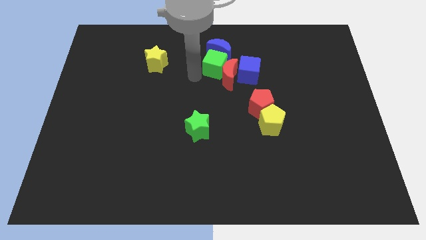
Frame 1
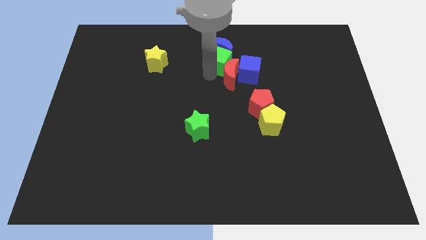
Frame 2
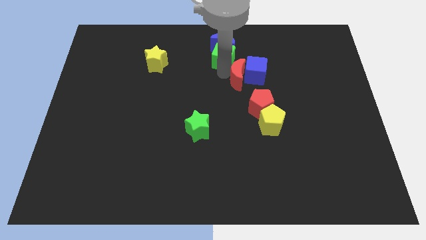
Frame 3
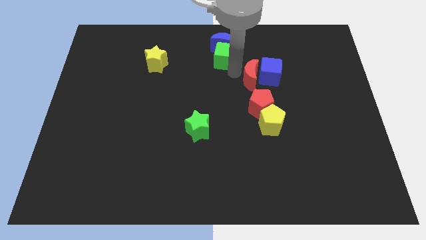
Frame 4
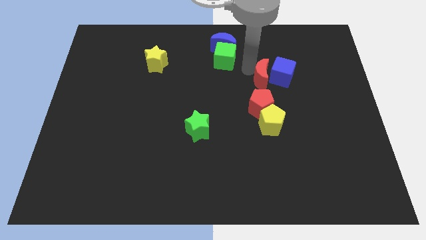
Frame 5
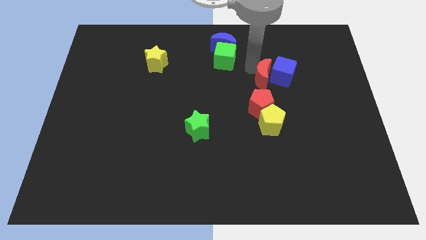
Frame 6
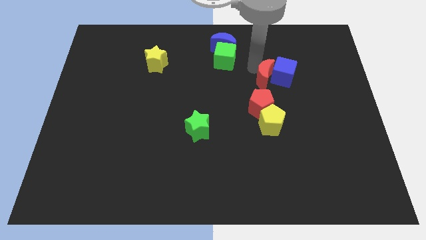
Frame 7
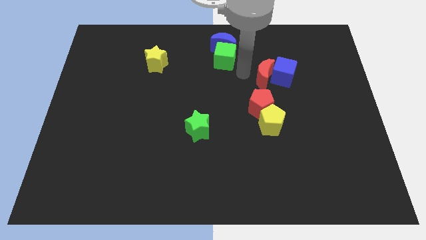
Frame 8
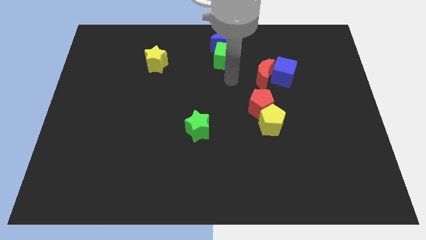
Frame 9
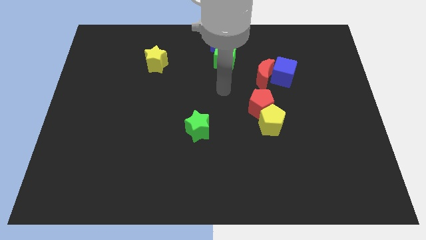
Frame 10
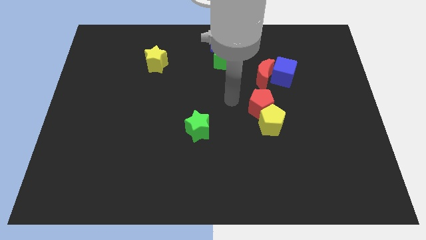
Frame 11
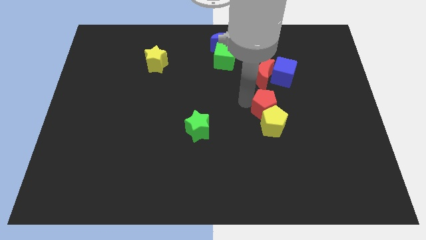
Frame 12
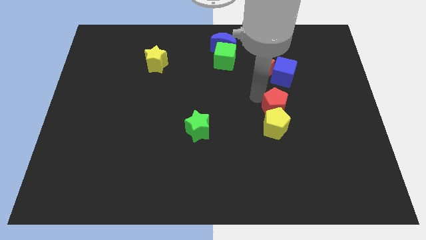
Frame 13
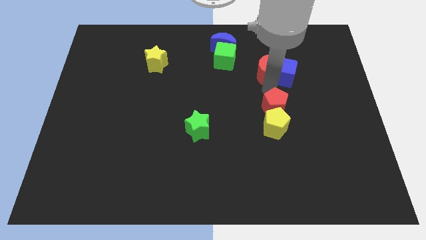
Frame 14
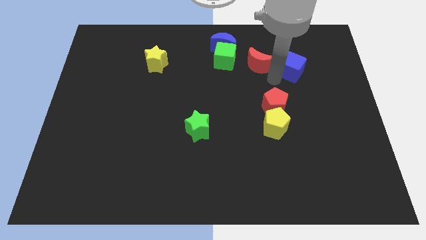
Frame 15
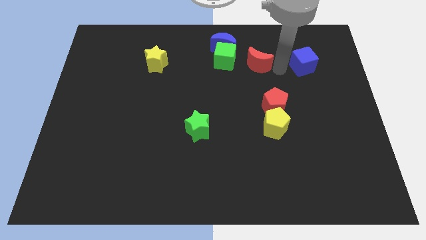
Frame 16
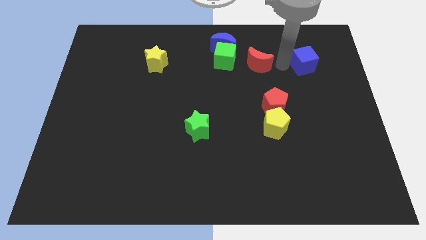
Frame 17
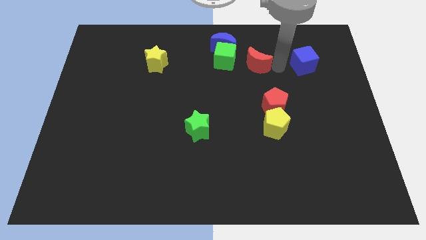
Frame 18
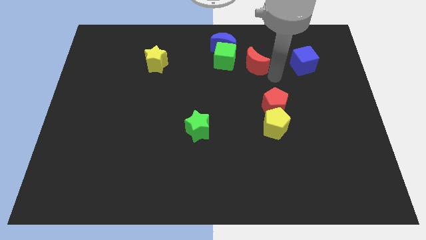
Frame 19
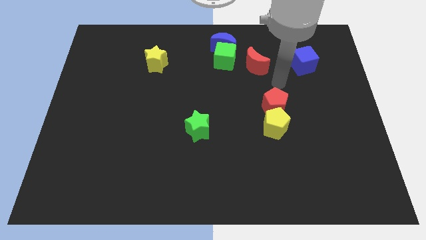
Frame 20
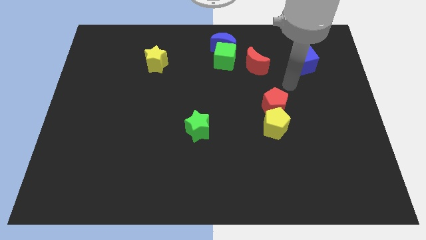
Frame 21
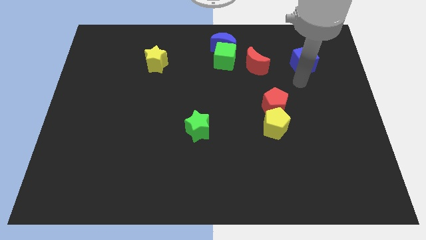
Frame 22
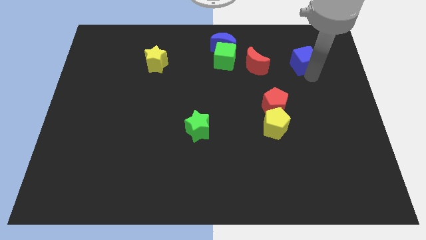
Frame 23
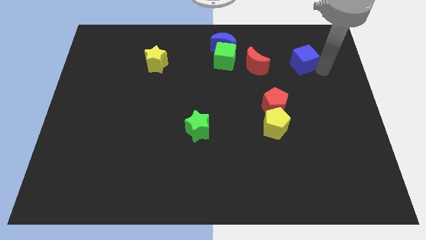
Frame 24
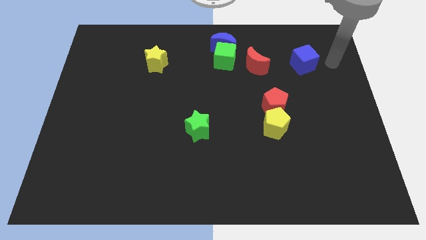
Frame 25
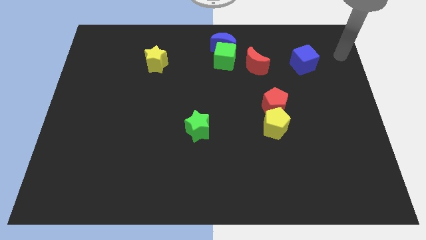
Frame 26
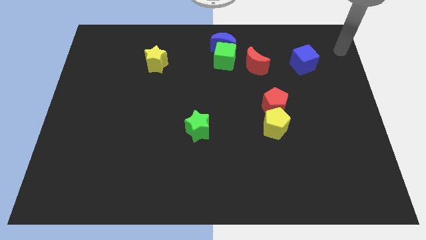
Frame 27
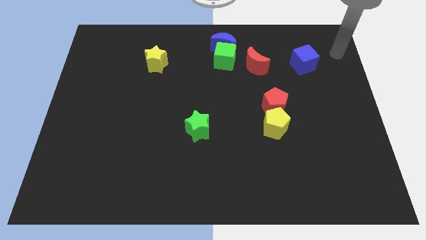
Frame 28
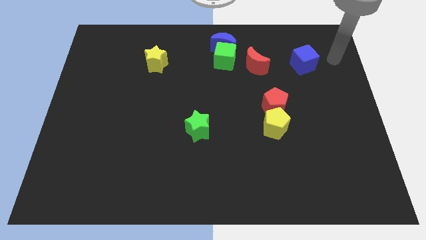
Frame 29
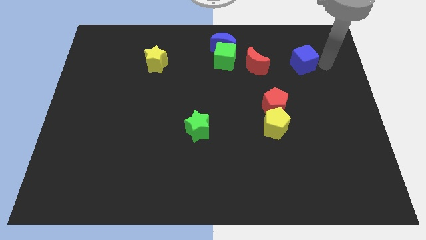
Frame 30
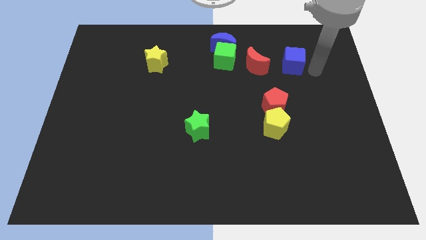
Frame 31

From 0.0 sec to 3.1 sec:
separate red crescent from the blue cube

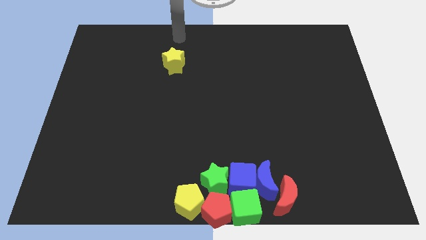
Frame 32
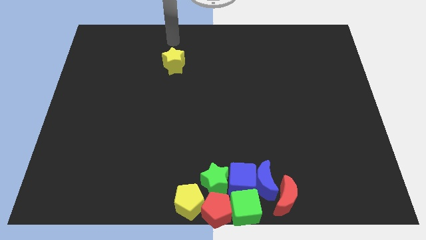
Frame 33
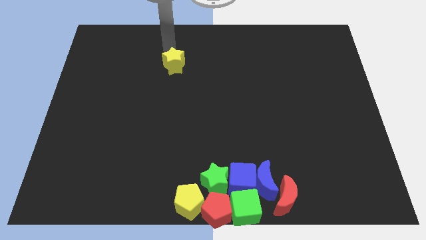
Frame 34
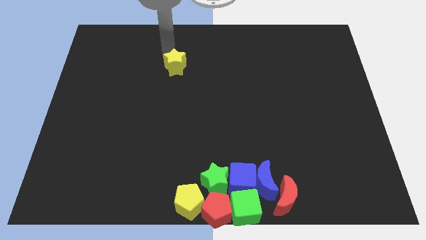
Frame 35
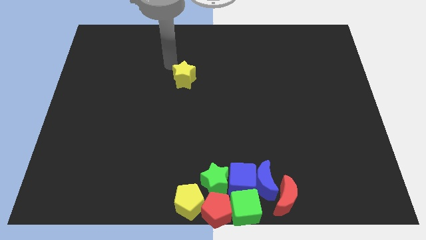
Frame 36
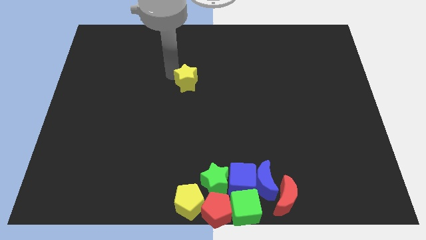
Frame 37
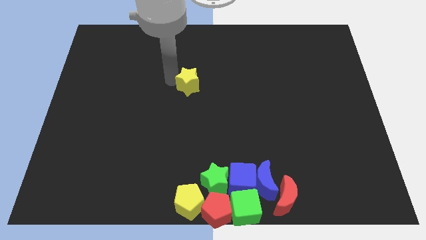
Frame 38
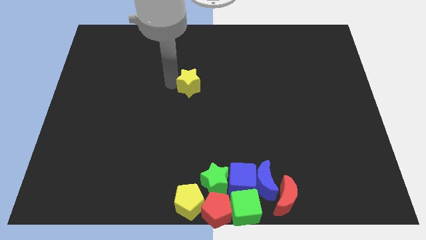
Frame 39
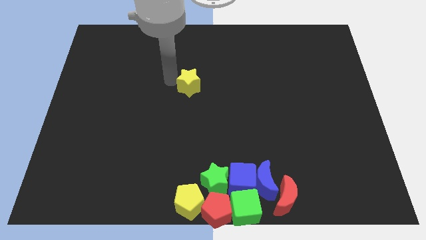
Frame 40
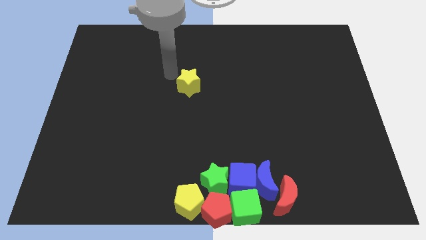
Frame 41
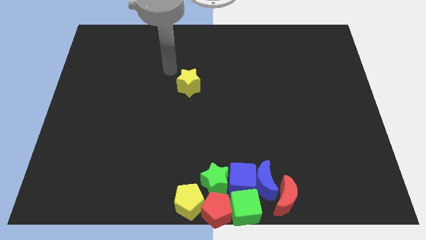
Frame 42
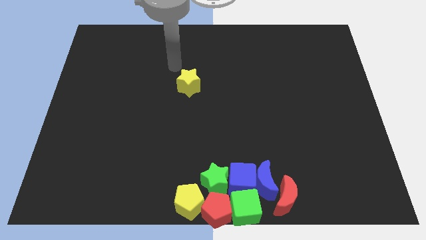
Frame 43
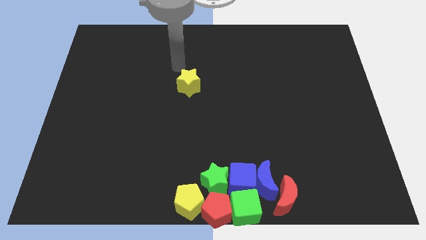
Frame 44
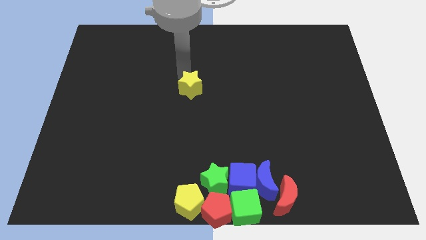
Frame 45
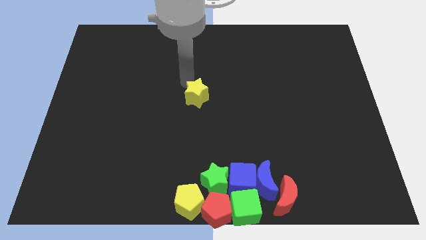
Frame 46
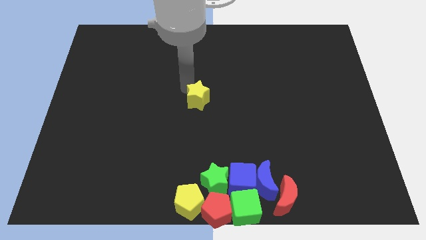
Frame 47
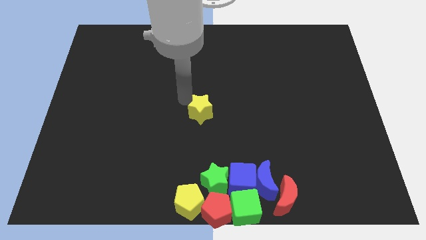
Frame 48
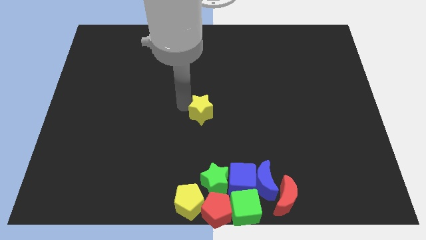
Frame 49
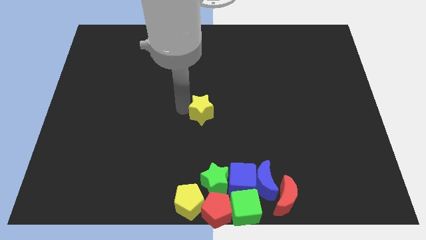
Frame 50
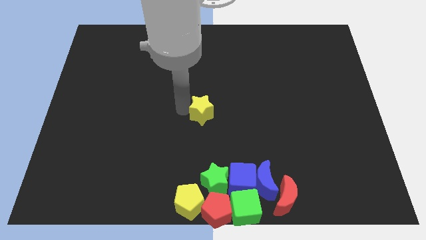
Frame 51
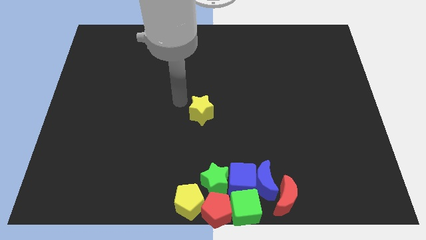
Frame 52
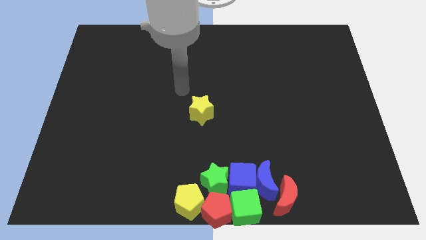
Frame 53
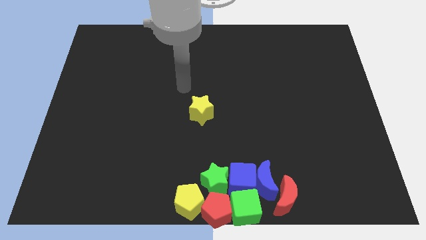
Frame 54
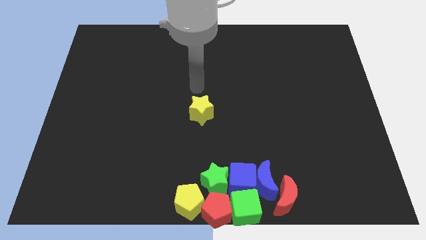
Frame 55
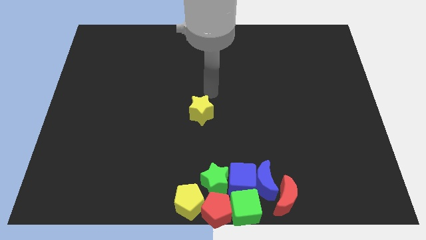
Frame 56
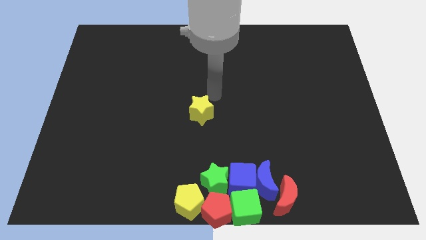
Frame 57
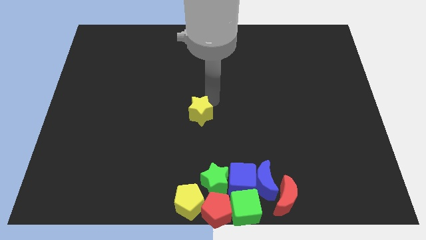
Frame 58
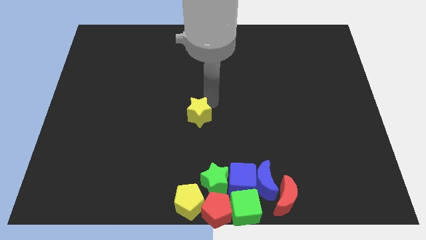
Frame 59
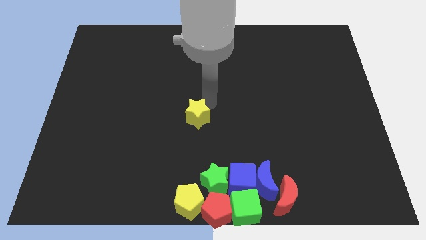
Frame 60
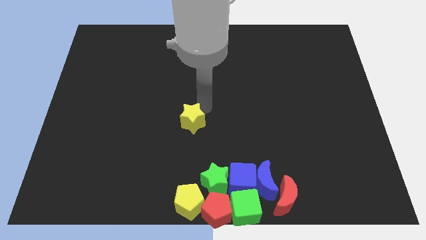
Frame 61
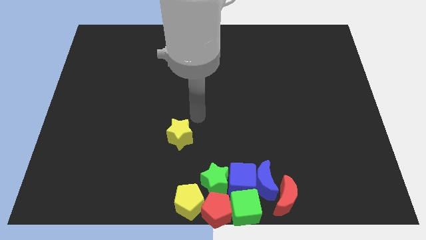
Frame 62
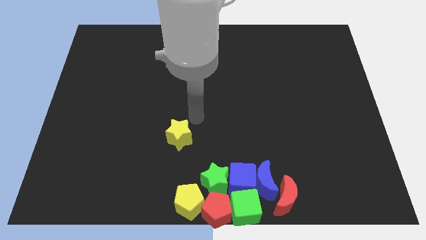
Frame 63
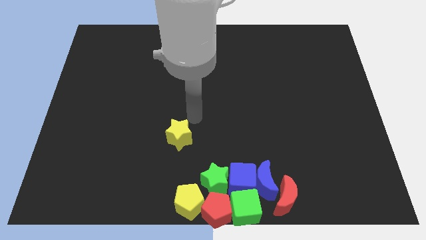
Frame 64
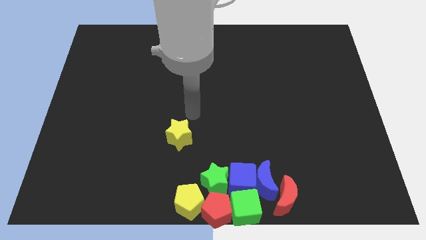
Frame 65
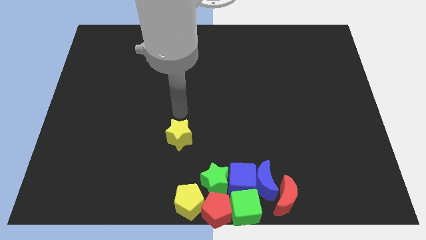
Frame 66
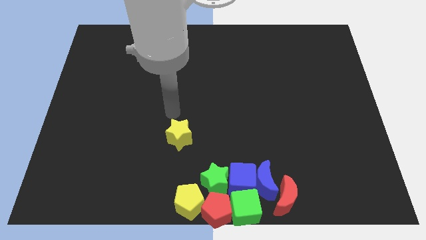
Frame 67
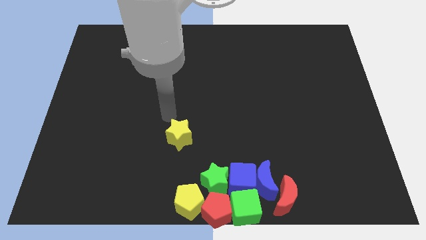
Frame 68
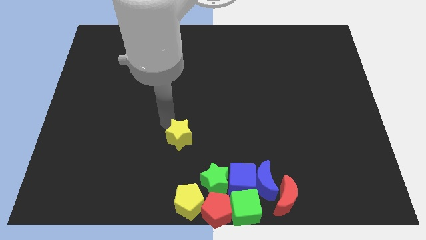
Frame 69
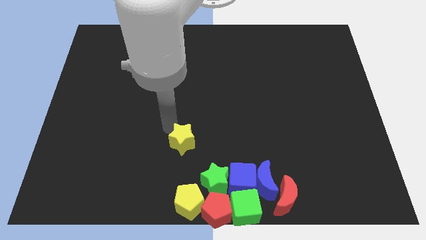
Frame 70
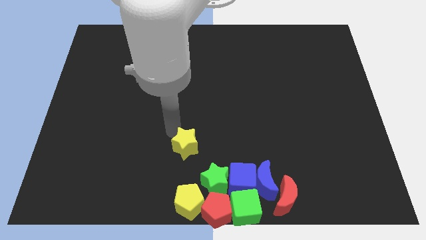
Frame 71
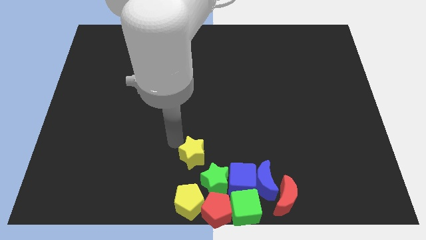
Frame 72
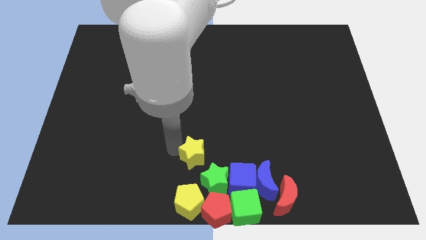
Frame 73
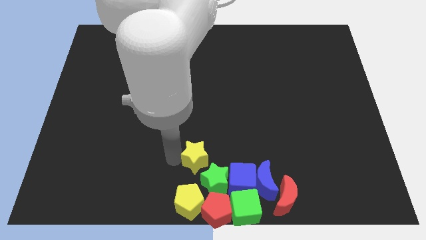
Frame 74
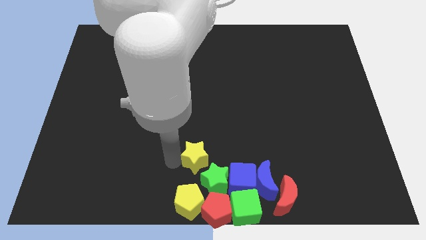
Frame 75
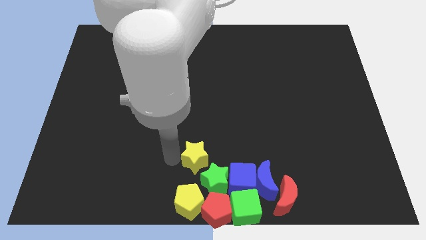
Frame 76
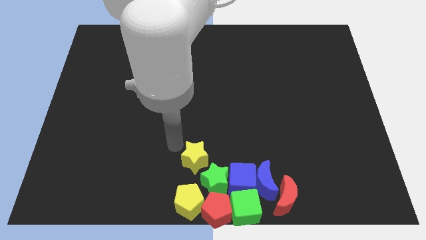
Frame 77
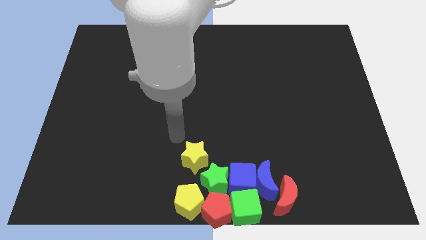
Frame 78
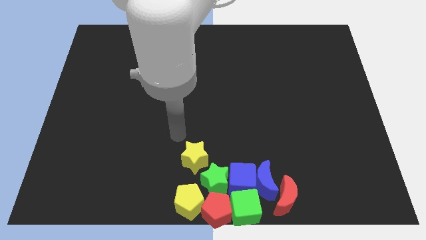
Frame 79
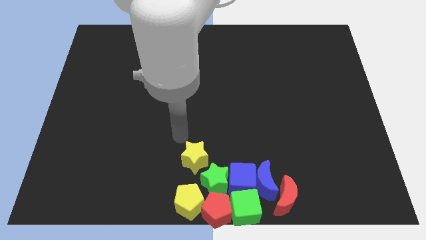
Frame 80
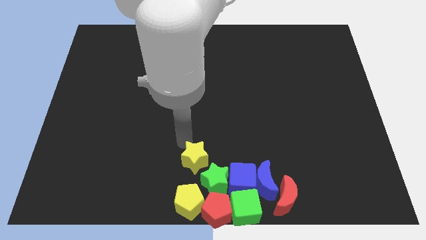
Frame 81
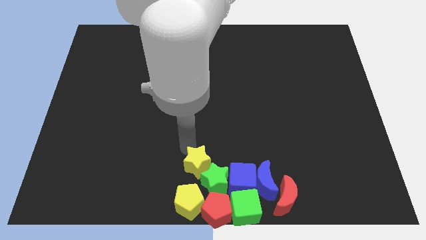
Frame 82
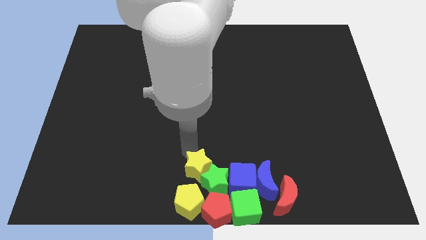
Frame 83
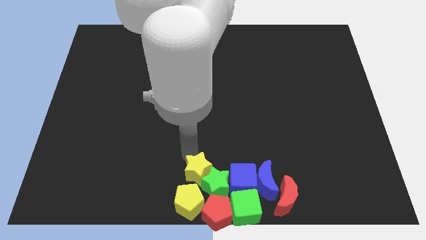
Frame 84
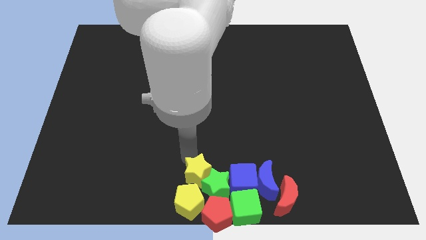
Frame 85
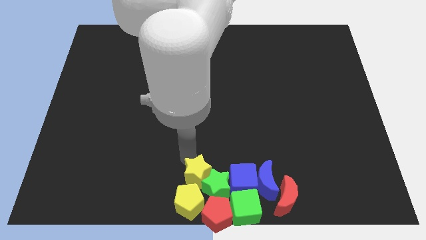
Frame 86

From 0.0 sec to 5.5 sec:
push the yellow star into the green star

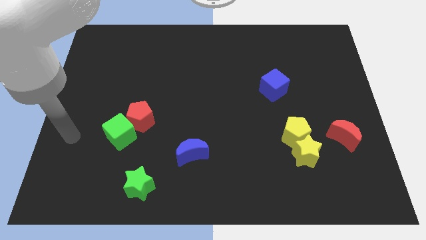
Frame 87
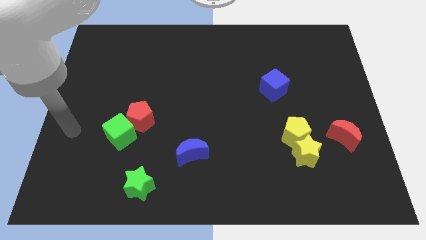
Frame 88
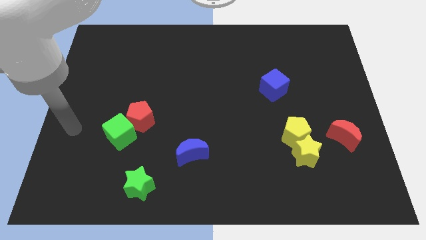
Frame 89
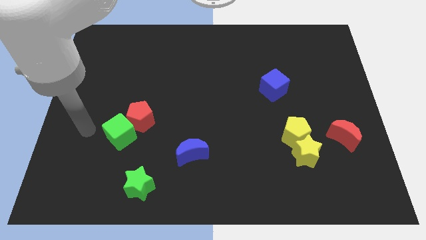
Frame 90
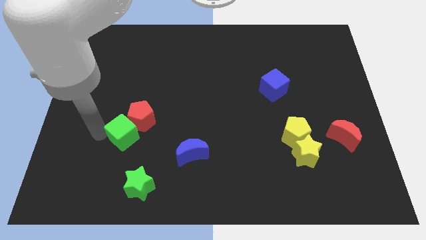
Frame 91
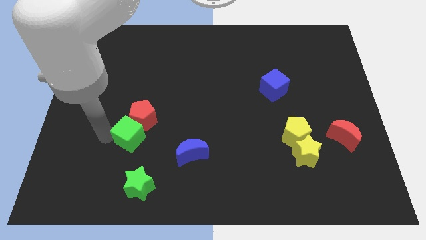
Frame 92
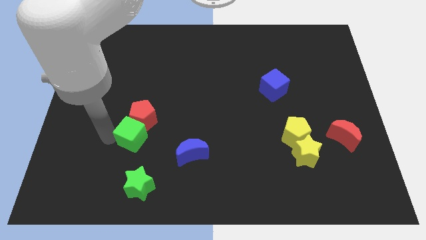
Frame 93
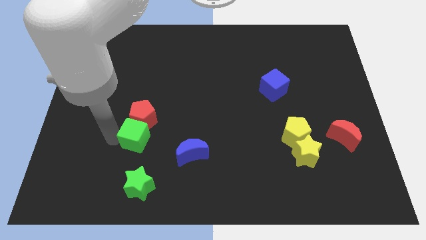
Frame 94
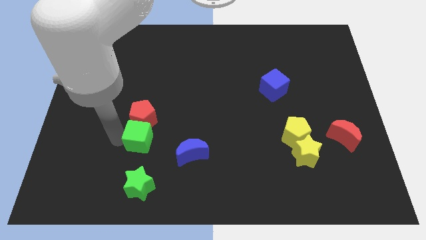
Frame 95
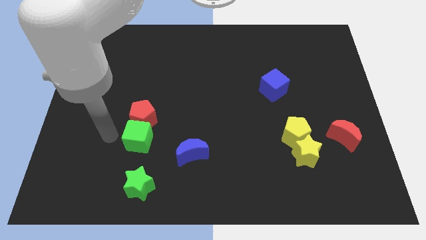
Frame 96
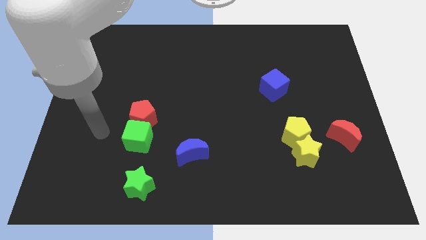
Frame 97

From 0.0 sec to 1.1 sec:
put the green cube above the green star
